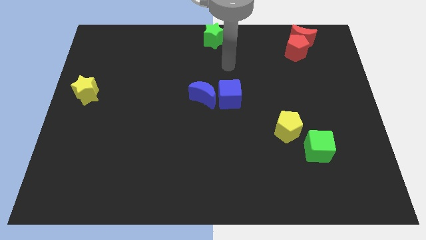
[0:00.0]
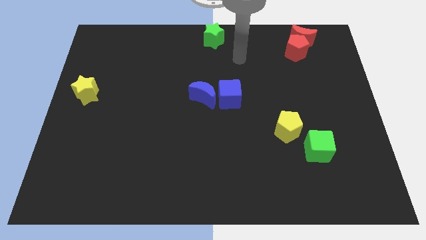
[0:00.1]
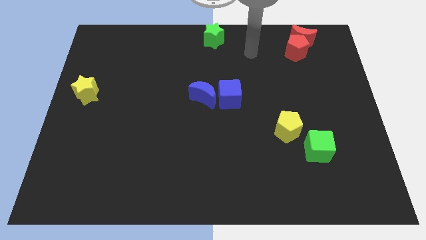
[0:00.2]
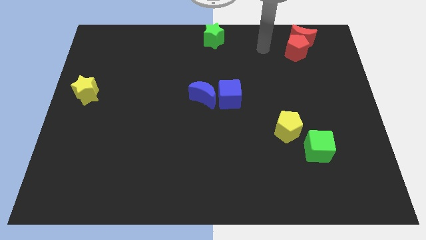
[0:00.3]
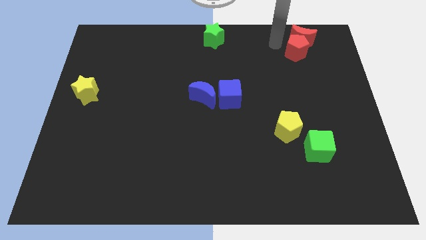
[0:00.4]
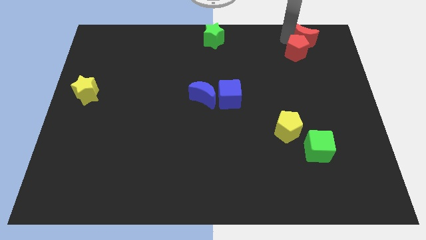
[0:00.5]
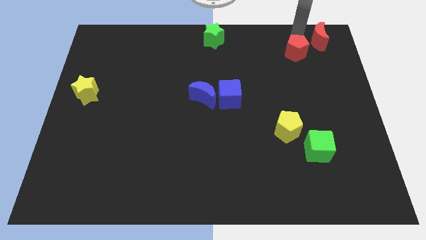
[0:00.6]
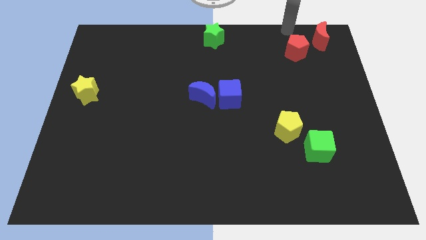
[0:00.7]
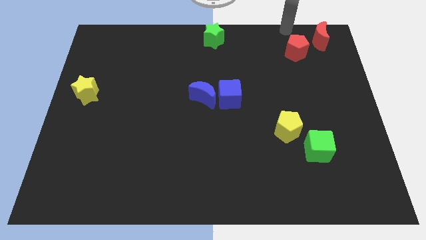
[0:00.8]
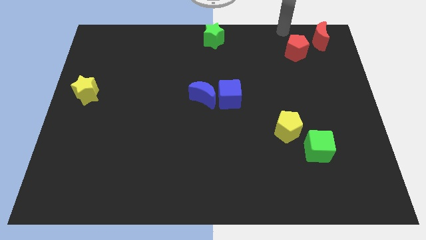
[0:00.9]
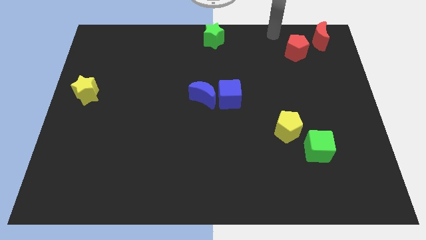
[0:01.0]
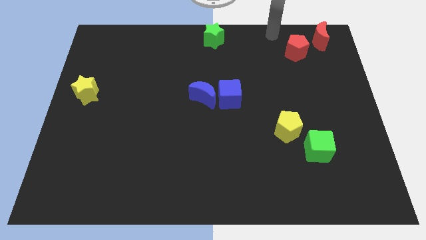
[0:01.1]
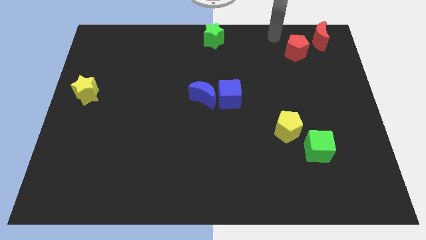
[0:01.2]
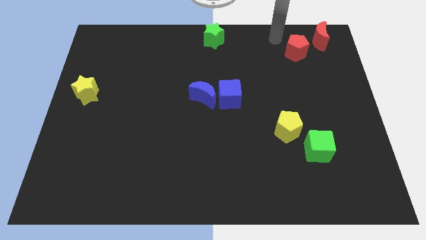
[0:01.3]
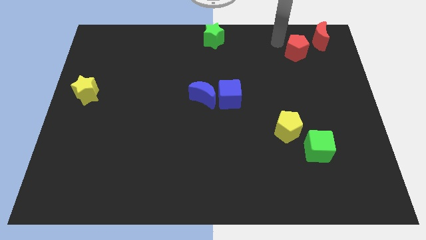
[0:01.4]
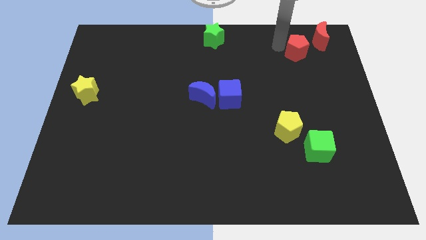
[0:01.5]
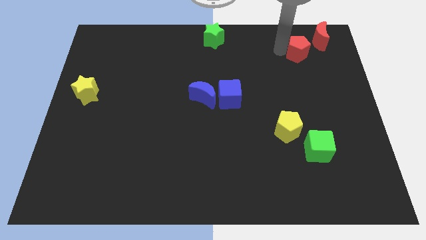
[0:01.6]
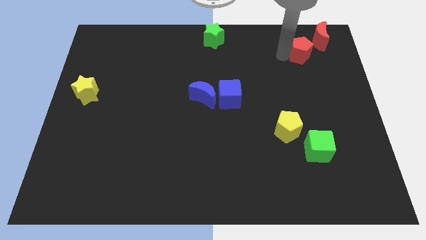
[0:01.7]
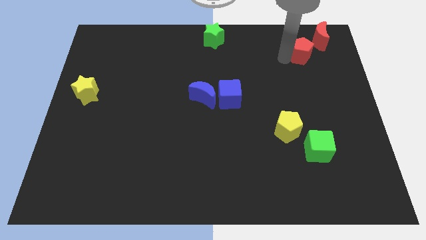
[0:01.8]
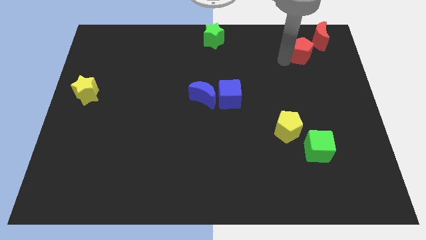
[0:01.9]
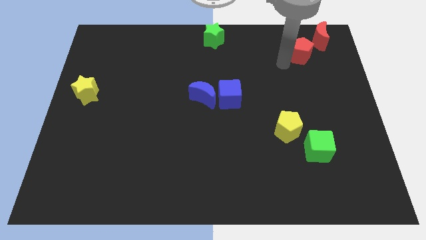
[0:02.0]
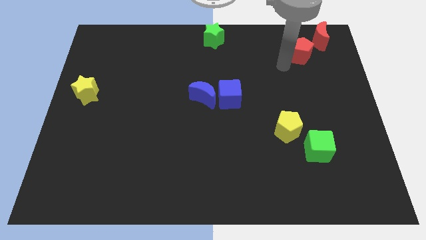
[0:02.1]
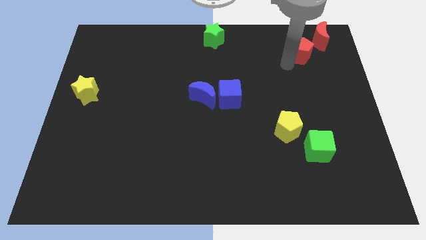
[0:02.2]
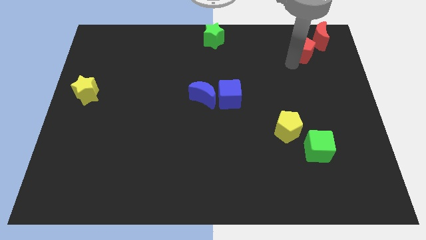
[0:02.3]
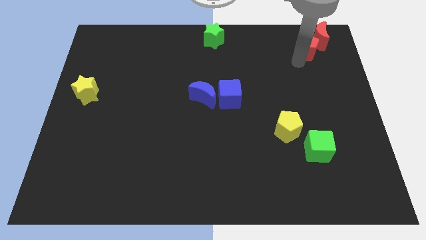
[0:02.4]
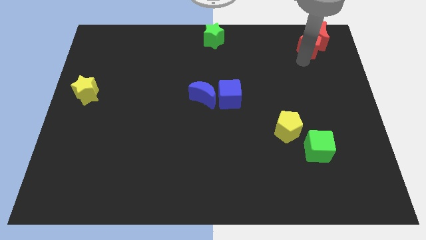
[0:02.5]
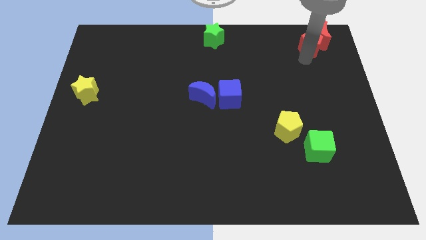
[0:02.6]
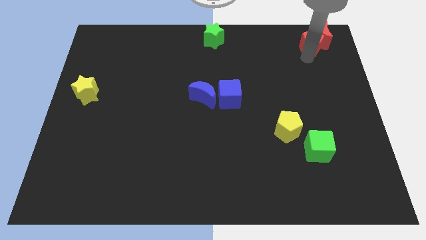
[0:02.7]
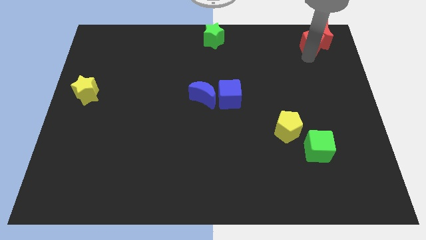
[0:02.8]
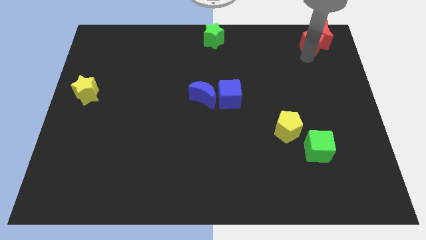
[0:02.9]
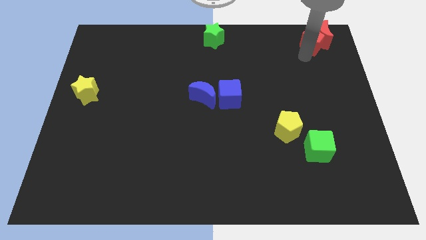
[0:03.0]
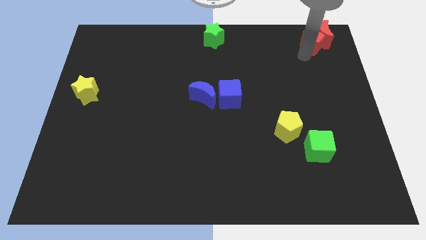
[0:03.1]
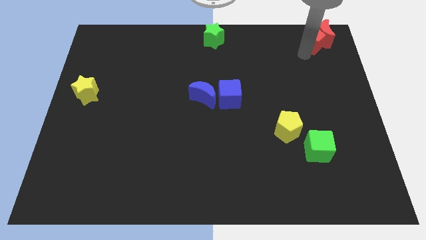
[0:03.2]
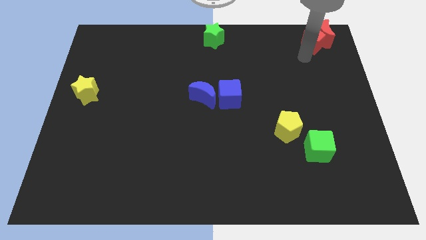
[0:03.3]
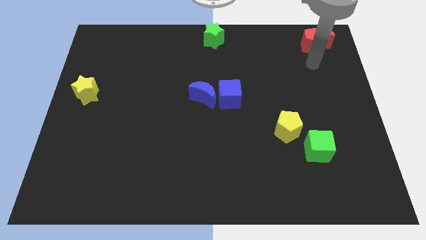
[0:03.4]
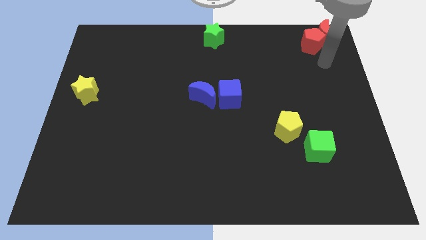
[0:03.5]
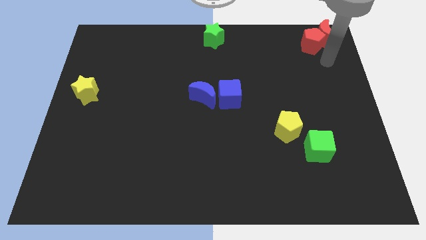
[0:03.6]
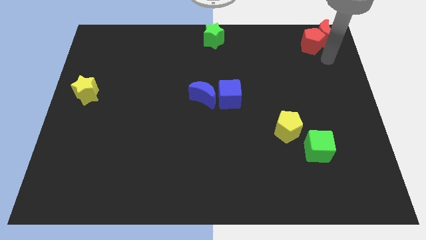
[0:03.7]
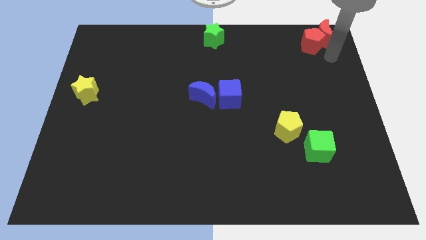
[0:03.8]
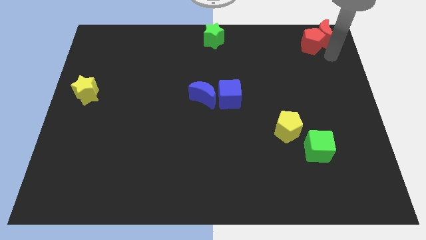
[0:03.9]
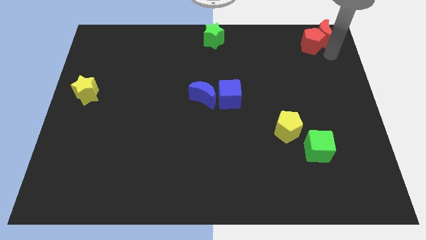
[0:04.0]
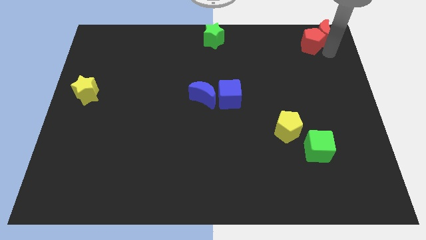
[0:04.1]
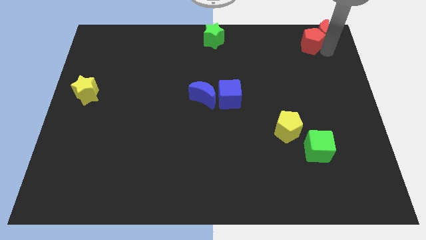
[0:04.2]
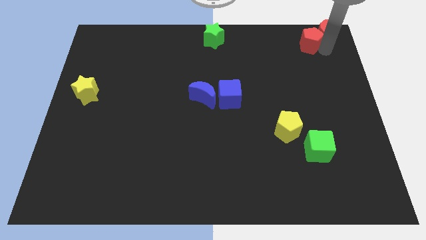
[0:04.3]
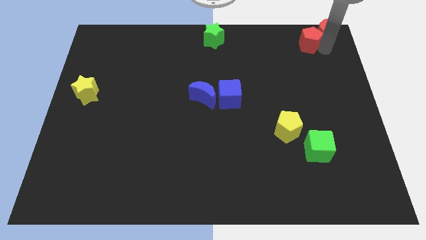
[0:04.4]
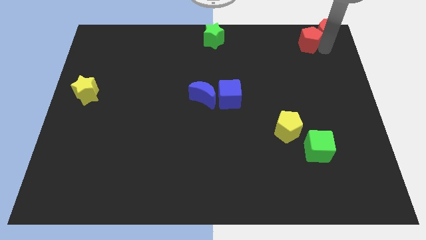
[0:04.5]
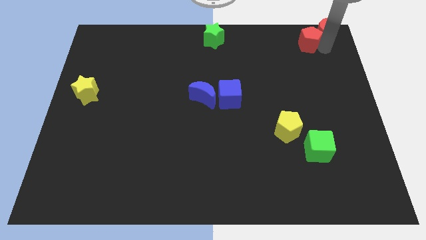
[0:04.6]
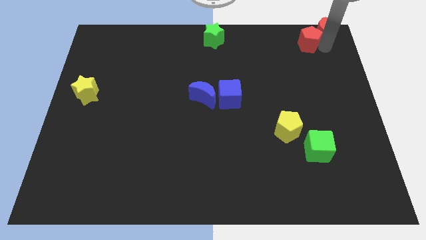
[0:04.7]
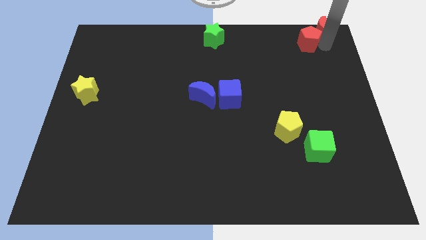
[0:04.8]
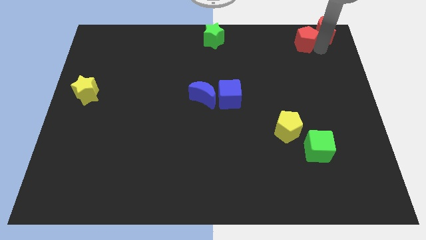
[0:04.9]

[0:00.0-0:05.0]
push the red blocks into the top right of the board

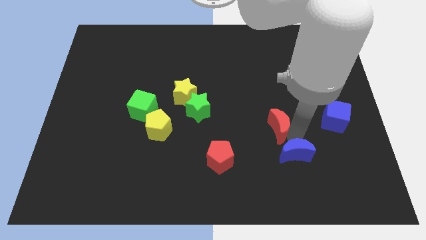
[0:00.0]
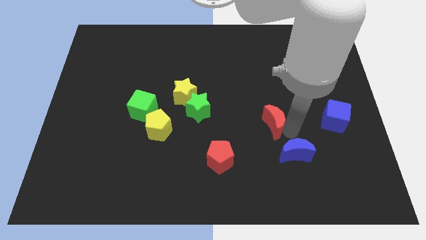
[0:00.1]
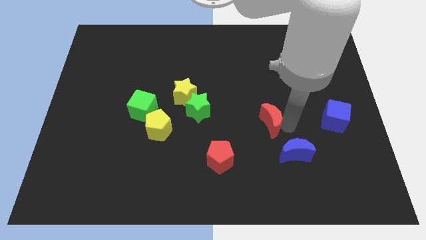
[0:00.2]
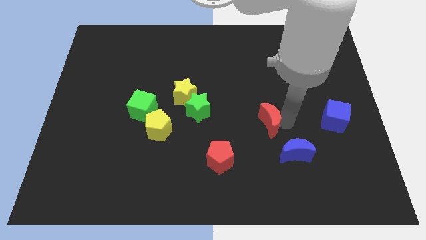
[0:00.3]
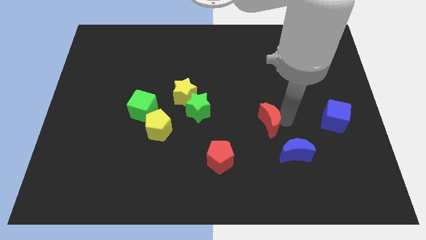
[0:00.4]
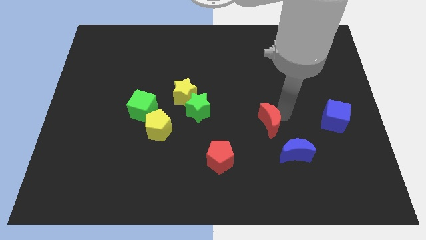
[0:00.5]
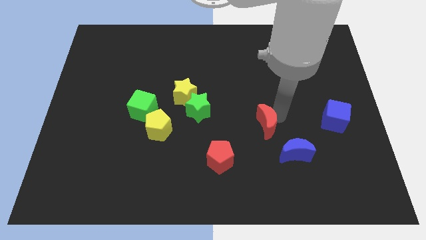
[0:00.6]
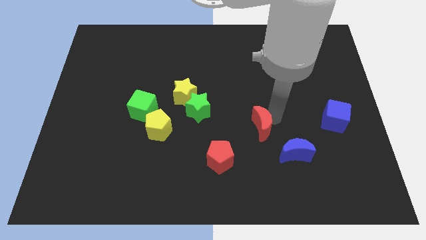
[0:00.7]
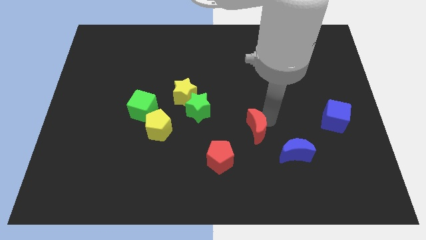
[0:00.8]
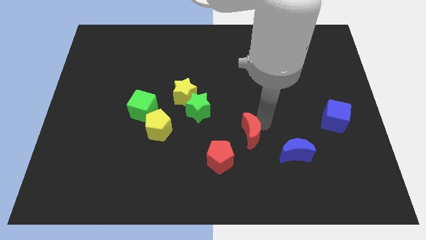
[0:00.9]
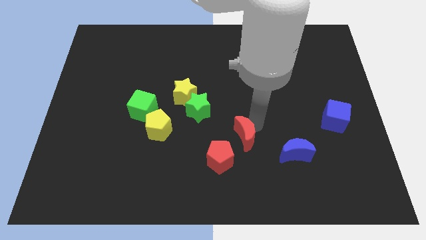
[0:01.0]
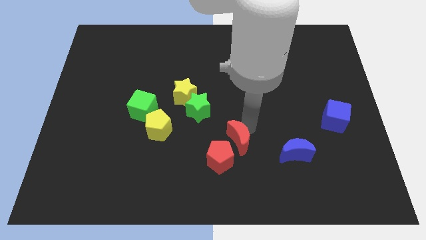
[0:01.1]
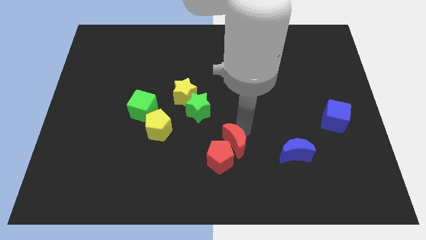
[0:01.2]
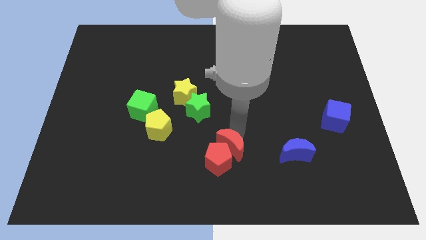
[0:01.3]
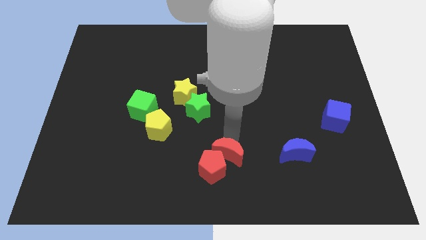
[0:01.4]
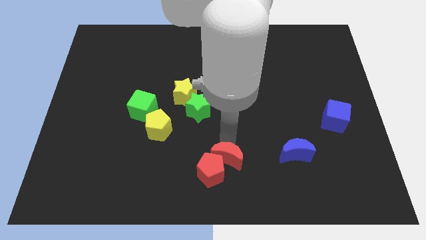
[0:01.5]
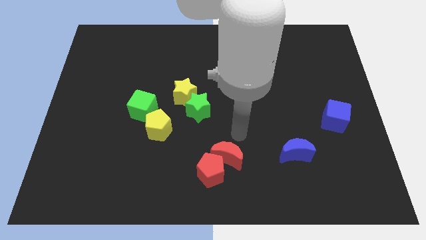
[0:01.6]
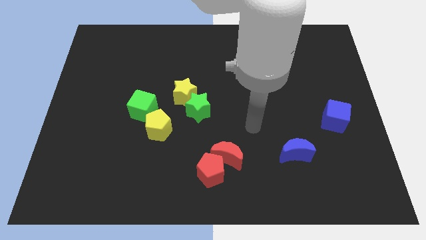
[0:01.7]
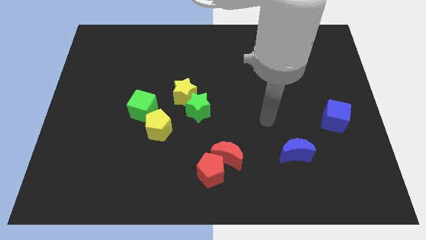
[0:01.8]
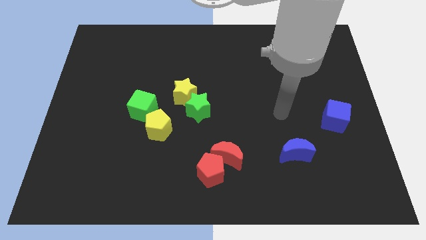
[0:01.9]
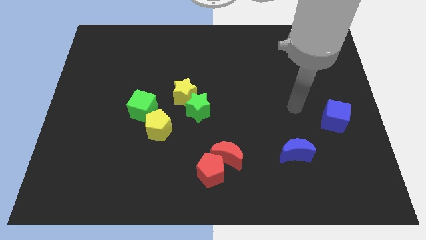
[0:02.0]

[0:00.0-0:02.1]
place the red moon to the top right side of the red pentagon

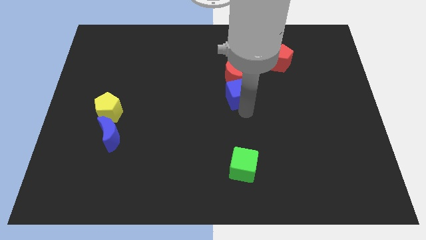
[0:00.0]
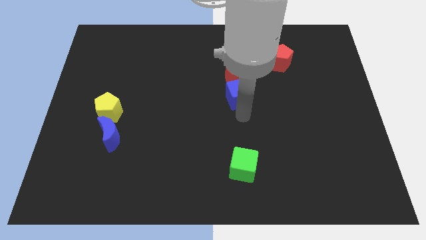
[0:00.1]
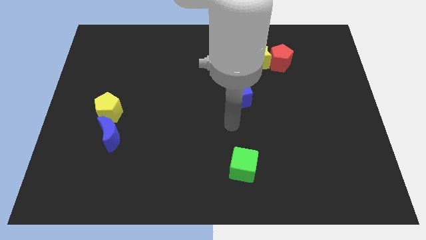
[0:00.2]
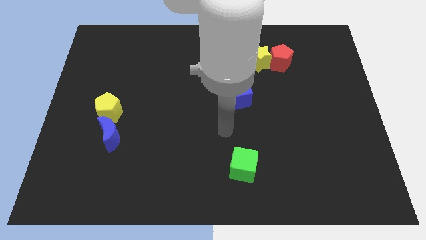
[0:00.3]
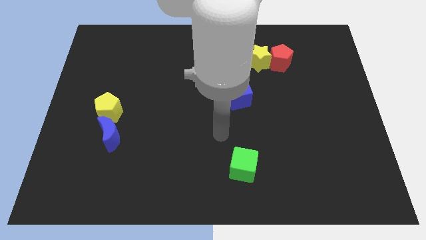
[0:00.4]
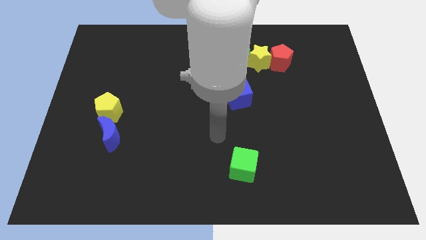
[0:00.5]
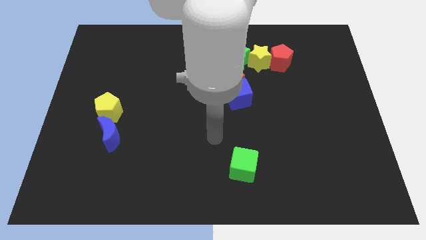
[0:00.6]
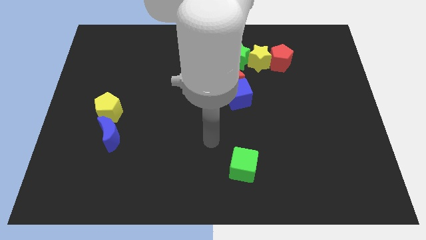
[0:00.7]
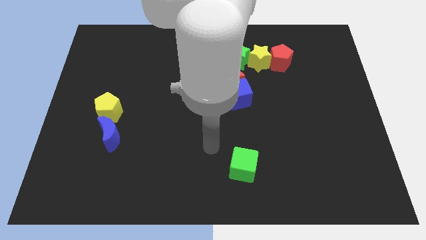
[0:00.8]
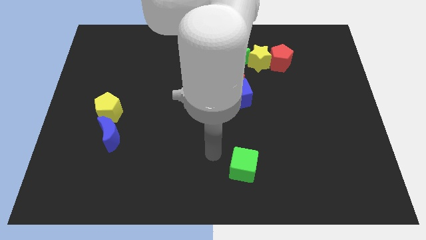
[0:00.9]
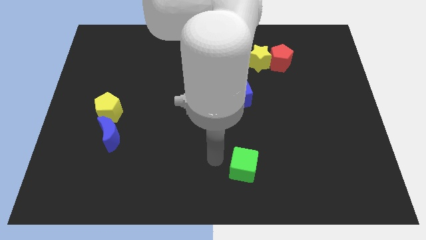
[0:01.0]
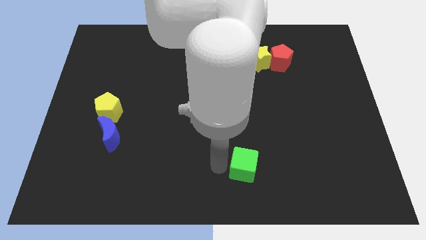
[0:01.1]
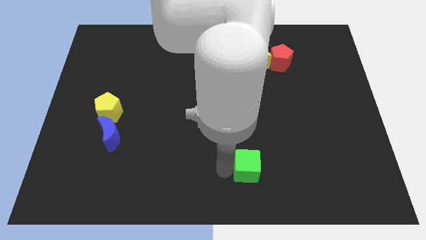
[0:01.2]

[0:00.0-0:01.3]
move arm to the left of green cube

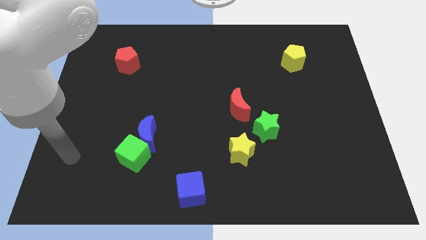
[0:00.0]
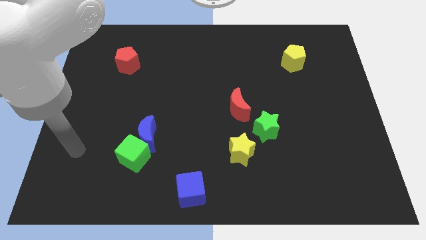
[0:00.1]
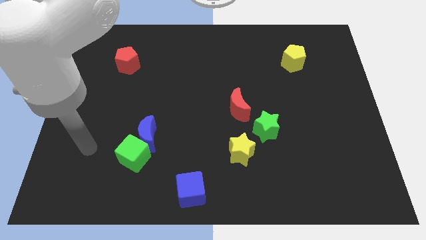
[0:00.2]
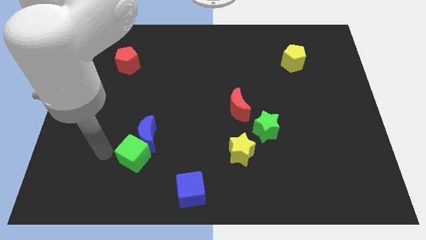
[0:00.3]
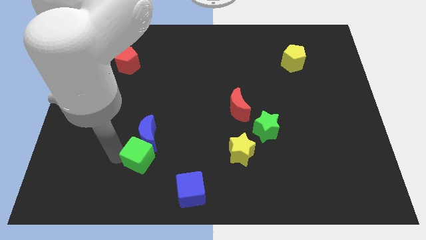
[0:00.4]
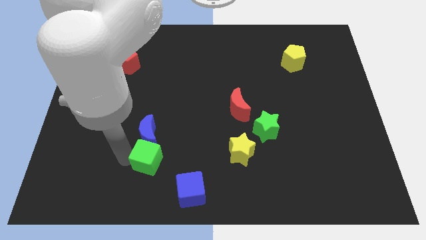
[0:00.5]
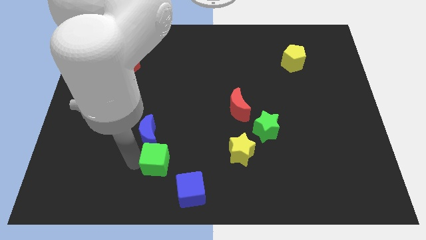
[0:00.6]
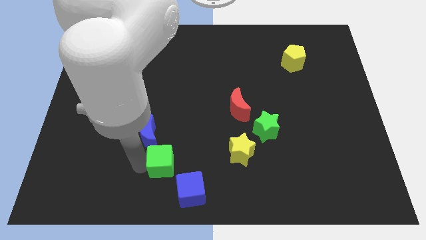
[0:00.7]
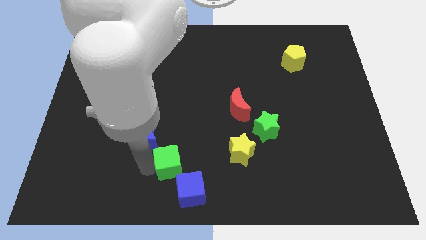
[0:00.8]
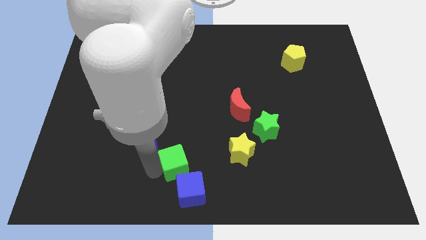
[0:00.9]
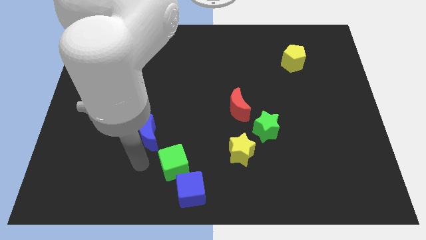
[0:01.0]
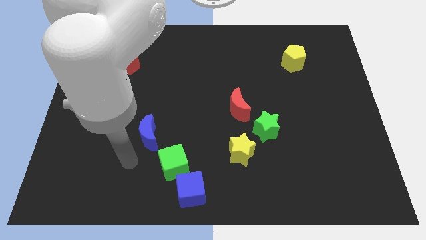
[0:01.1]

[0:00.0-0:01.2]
place the green cube between the blue cube and blue crescent
